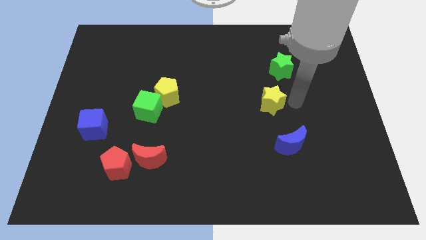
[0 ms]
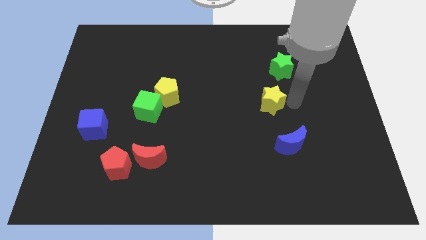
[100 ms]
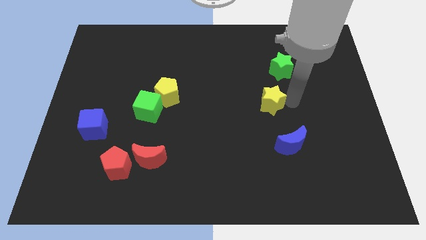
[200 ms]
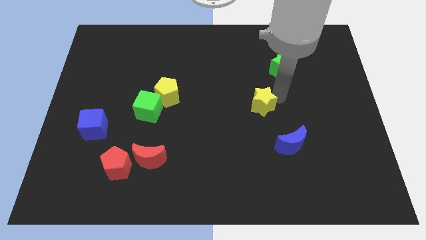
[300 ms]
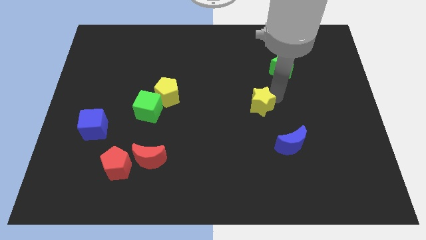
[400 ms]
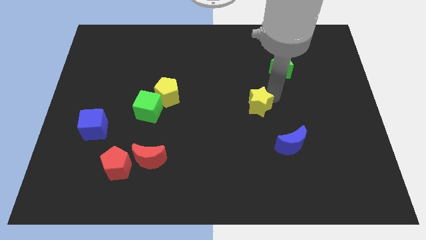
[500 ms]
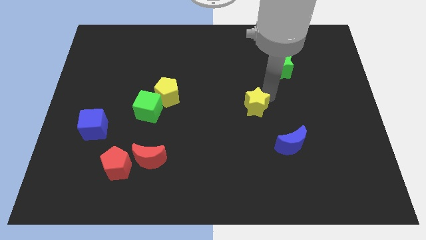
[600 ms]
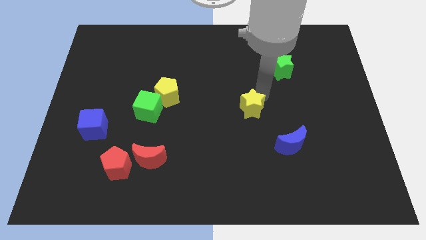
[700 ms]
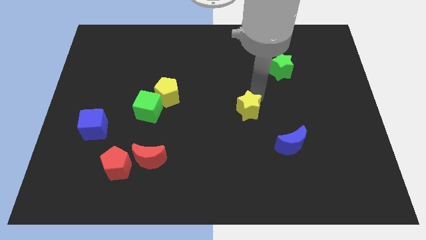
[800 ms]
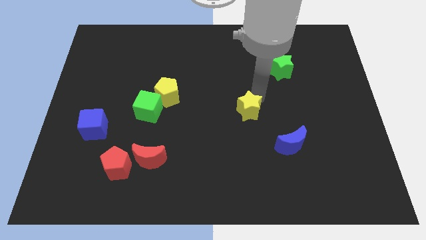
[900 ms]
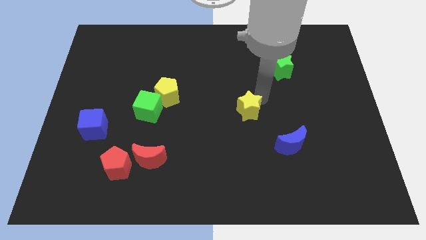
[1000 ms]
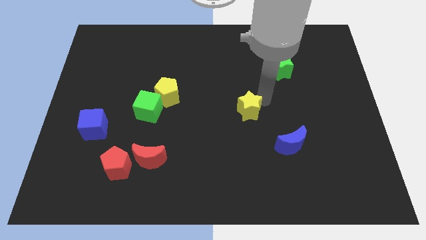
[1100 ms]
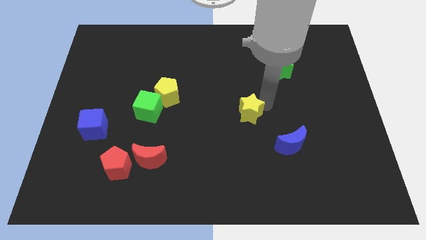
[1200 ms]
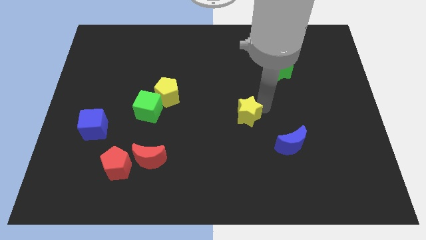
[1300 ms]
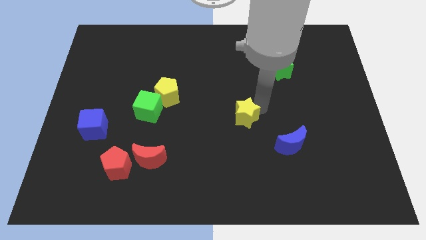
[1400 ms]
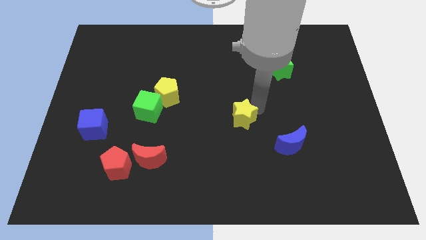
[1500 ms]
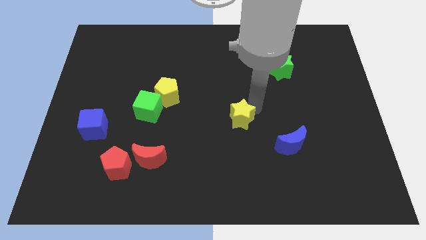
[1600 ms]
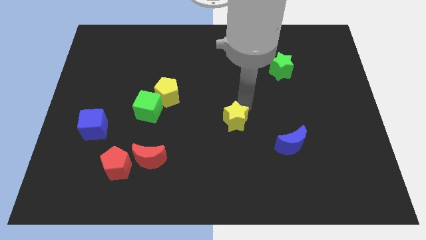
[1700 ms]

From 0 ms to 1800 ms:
push the yellow star to the top left of the blue crescent

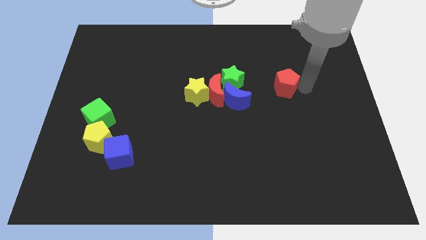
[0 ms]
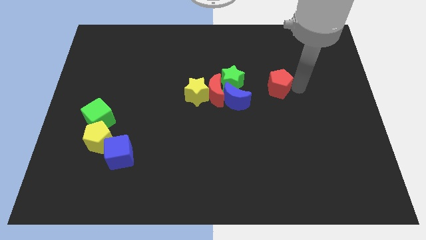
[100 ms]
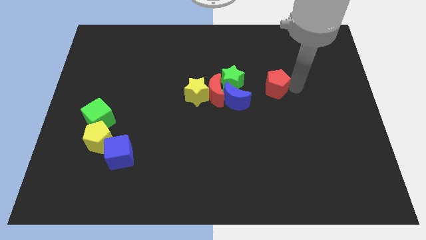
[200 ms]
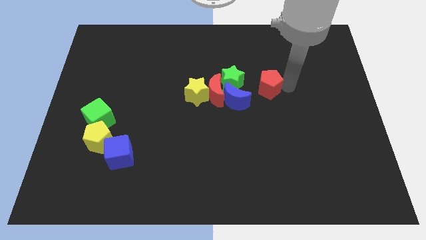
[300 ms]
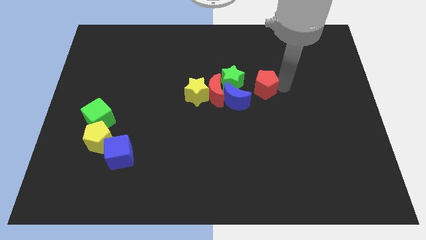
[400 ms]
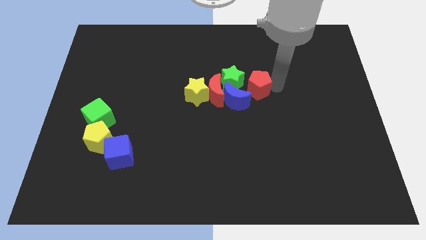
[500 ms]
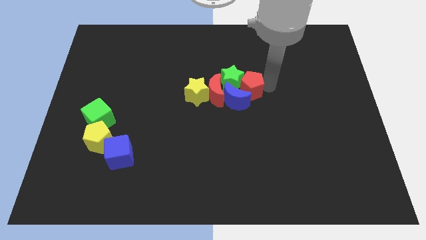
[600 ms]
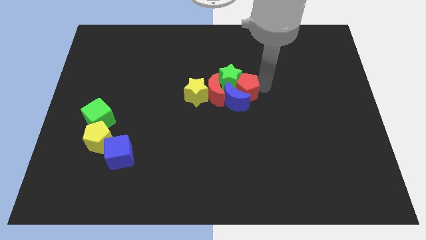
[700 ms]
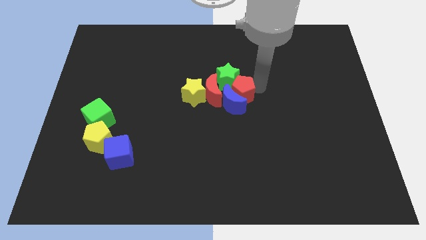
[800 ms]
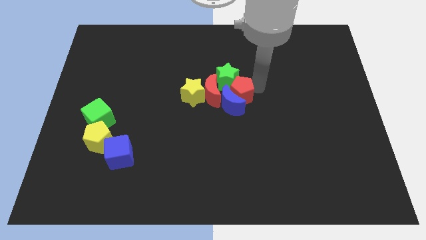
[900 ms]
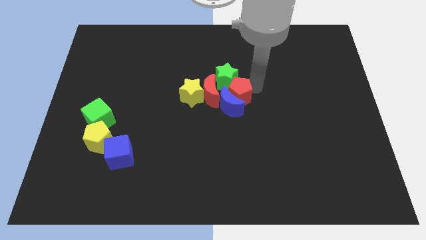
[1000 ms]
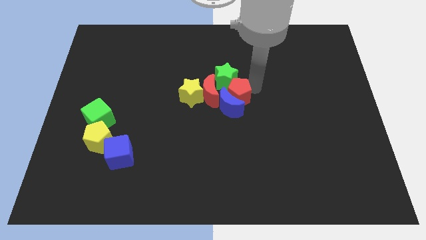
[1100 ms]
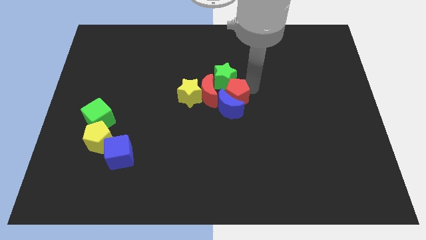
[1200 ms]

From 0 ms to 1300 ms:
push the red pentagon into the blue crescent

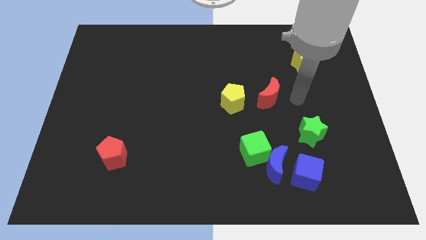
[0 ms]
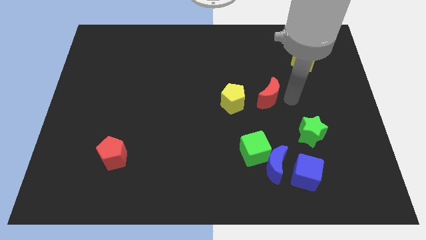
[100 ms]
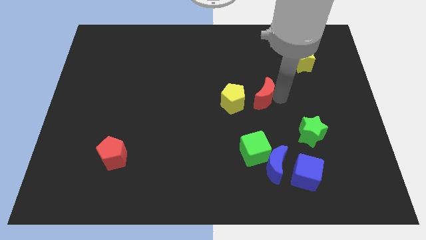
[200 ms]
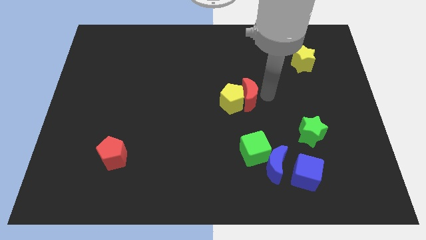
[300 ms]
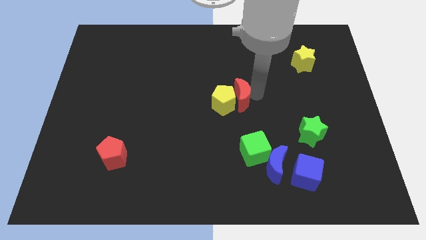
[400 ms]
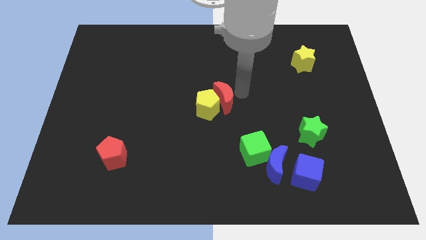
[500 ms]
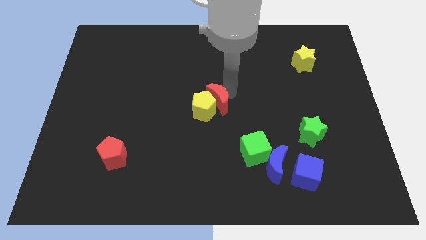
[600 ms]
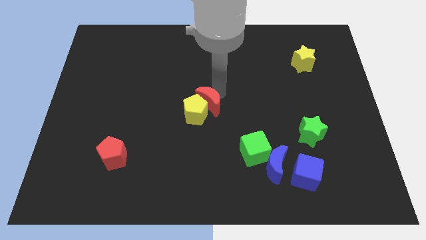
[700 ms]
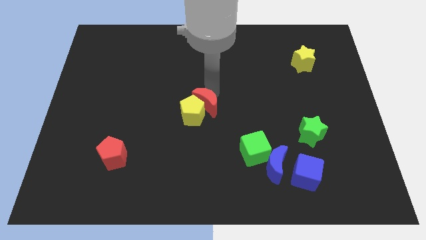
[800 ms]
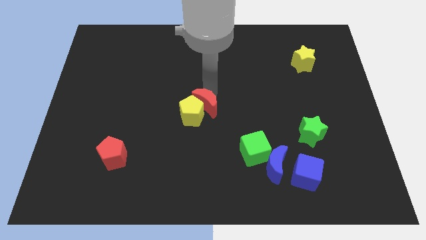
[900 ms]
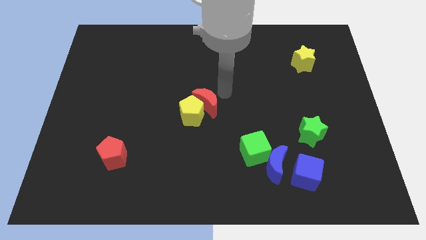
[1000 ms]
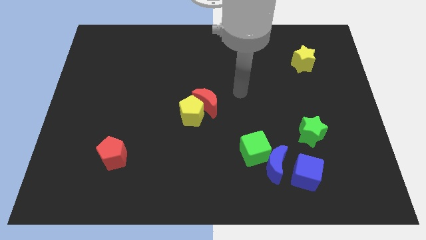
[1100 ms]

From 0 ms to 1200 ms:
push the red moon into the yellow pentagon

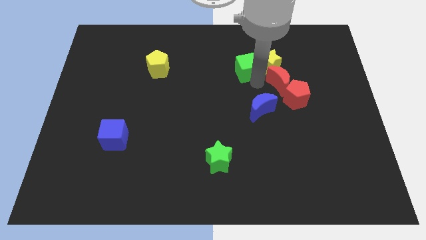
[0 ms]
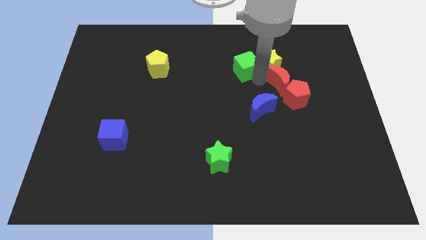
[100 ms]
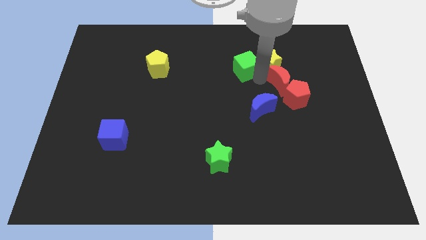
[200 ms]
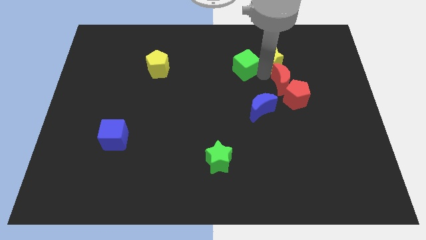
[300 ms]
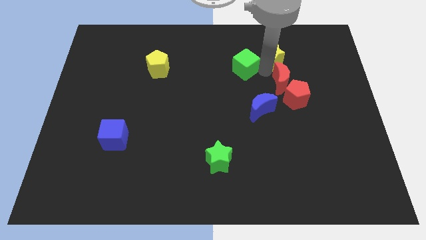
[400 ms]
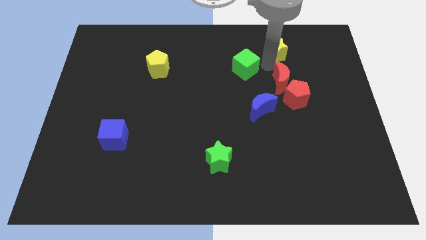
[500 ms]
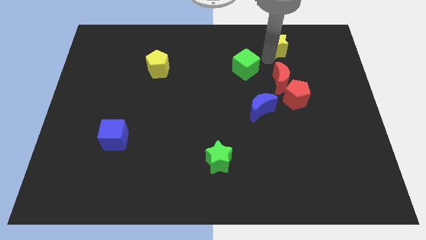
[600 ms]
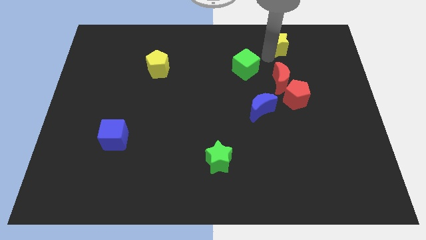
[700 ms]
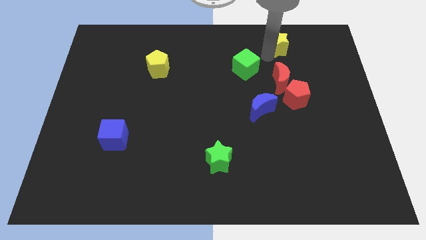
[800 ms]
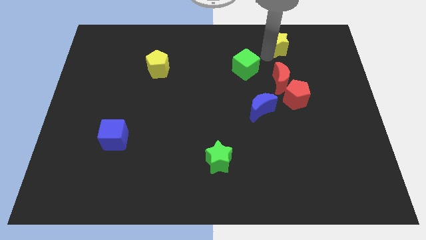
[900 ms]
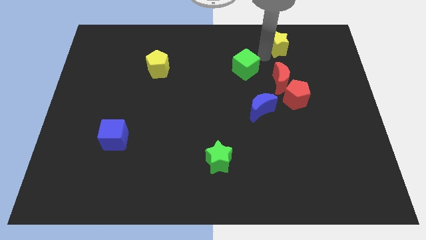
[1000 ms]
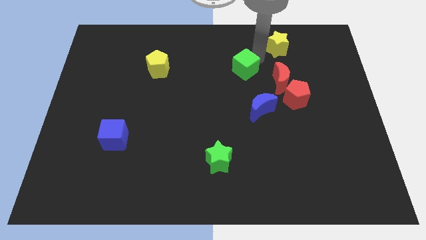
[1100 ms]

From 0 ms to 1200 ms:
separate the yellow star from the group of blocks

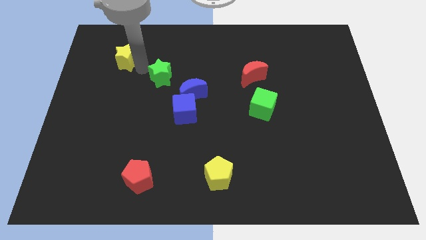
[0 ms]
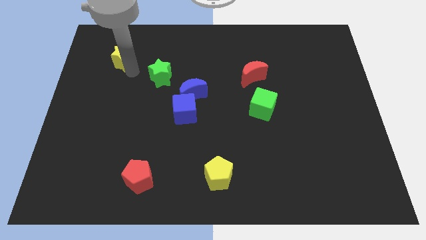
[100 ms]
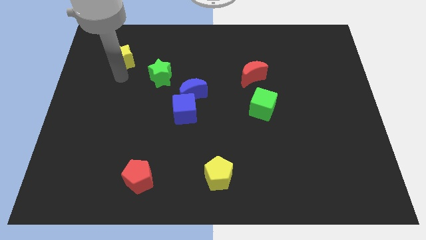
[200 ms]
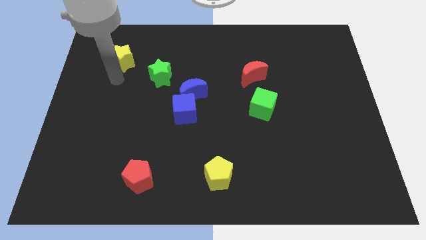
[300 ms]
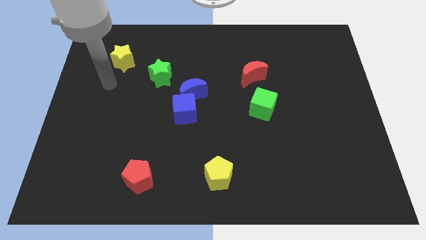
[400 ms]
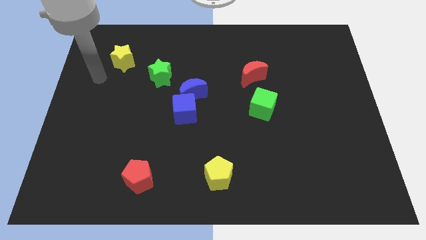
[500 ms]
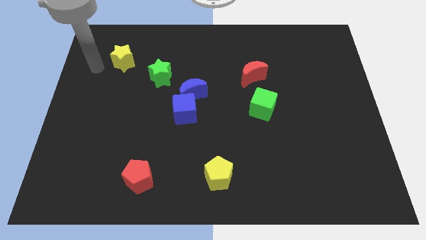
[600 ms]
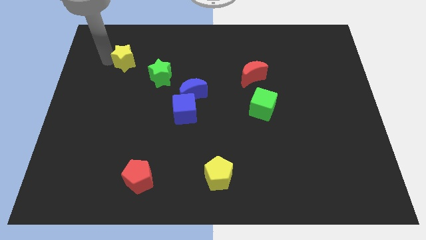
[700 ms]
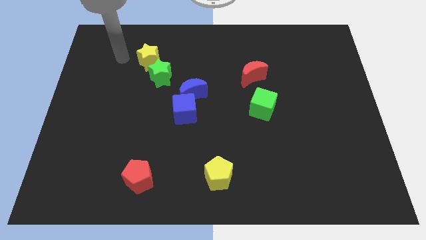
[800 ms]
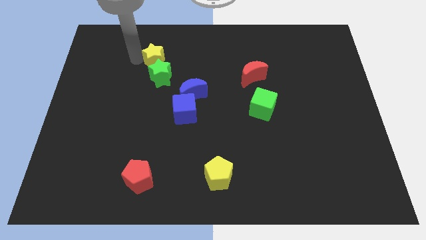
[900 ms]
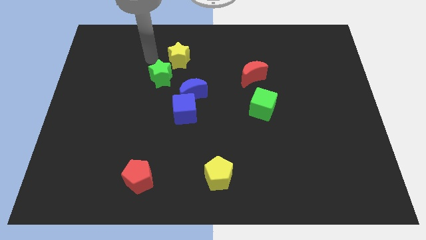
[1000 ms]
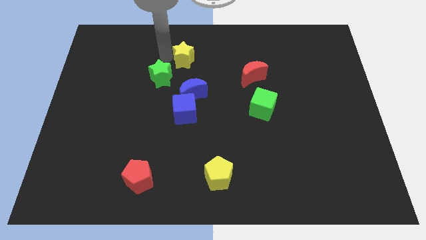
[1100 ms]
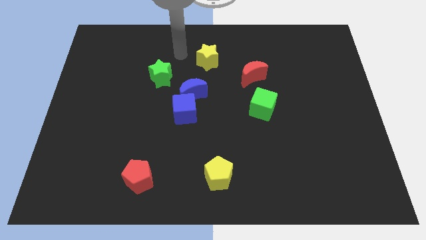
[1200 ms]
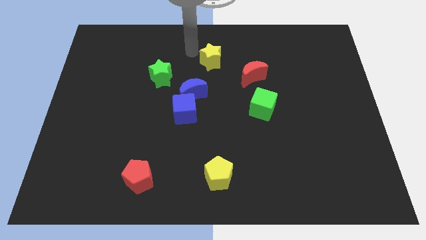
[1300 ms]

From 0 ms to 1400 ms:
push the yellow star to the top right side of the blue moon

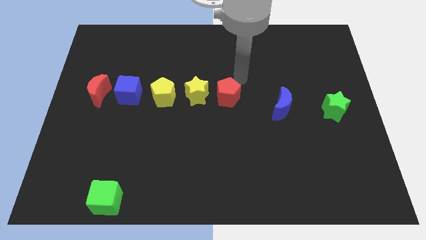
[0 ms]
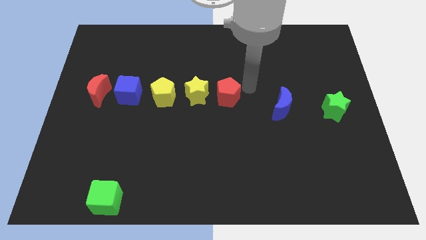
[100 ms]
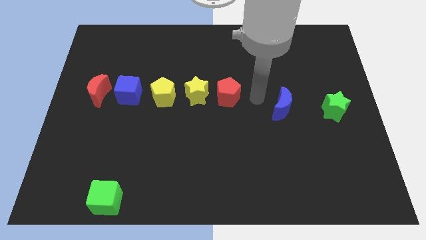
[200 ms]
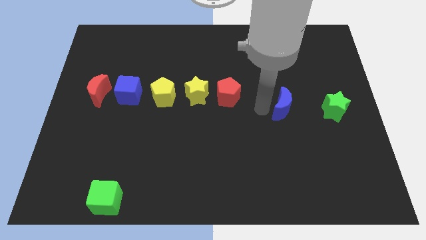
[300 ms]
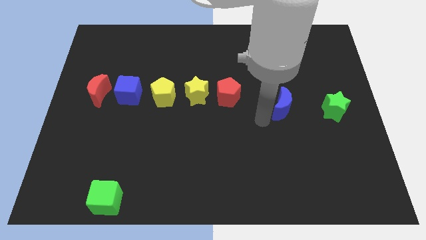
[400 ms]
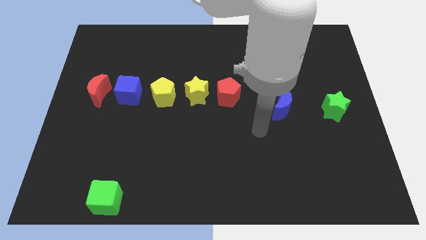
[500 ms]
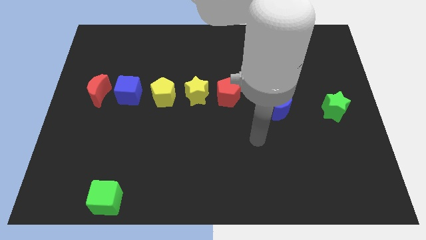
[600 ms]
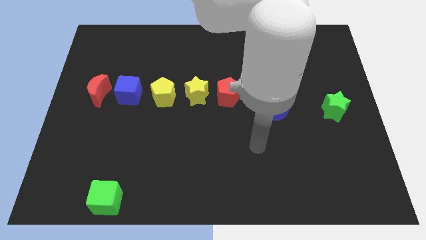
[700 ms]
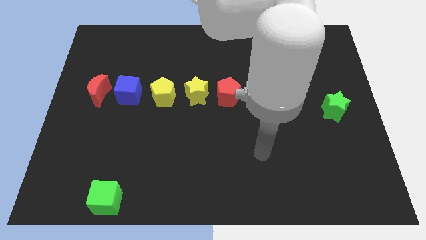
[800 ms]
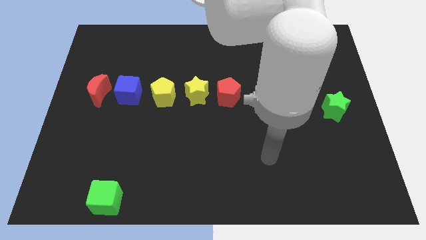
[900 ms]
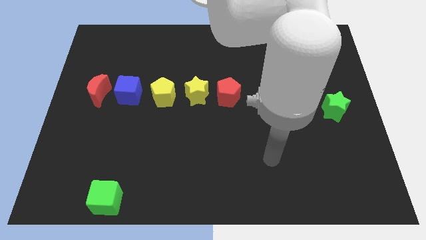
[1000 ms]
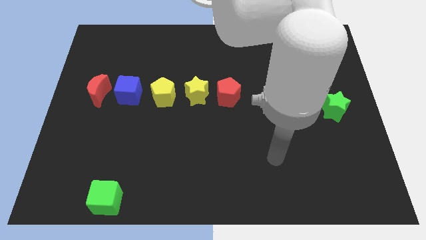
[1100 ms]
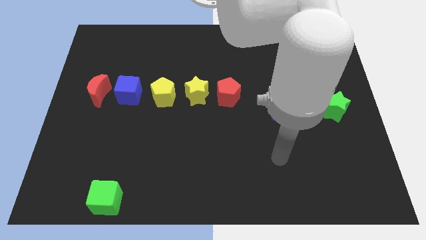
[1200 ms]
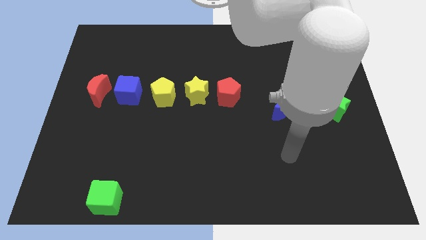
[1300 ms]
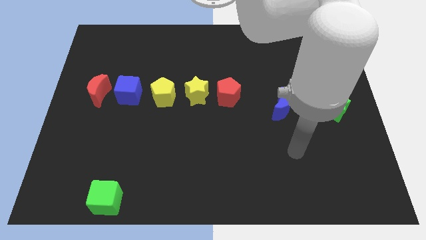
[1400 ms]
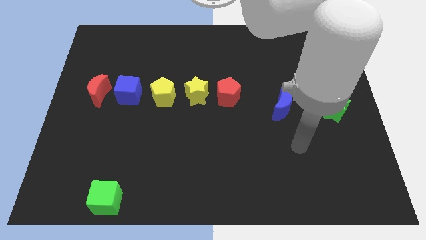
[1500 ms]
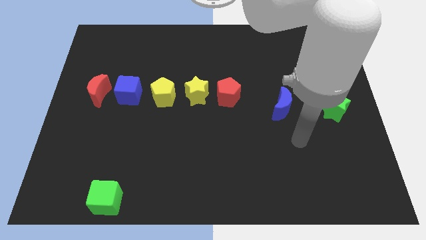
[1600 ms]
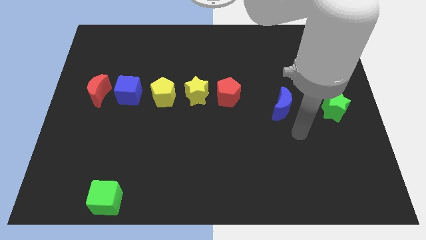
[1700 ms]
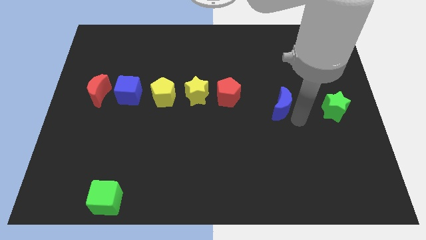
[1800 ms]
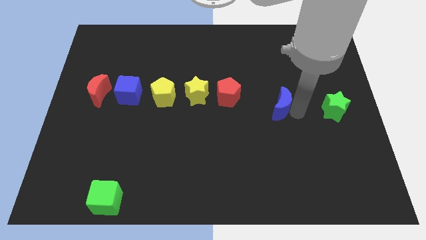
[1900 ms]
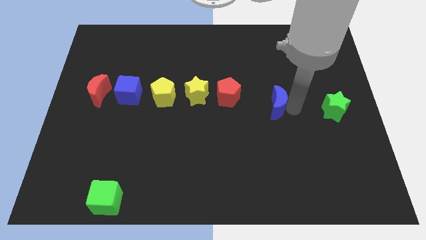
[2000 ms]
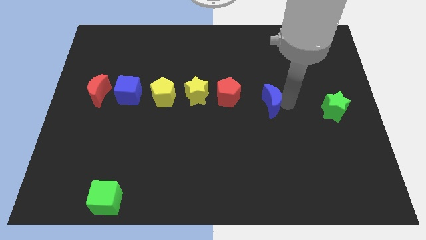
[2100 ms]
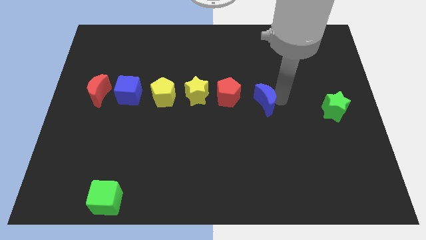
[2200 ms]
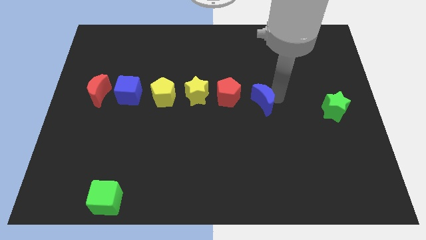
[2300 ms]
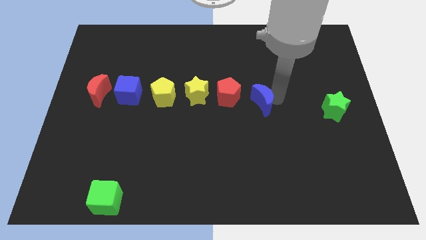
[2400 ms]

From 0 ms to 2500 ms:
push the blue crescent near the red pentagon
